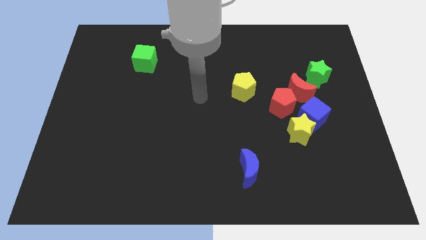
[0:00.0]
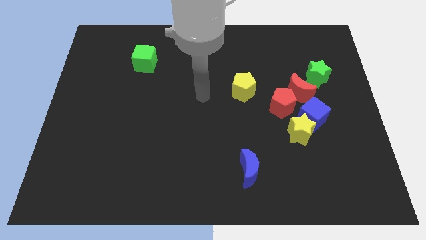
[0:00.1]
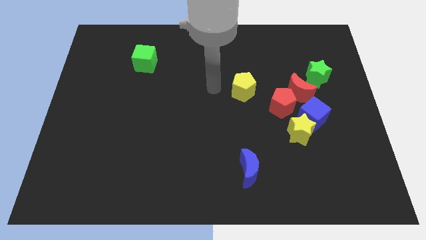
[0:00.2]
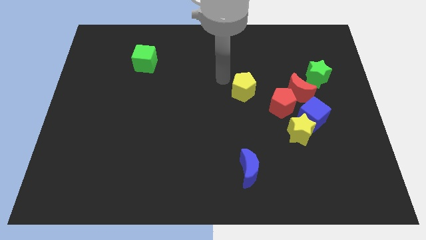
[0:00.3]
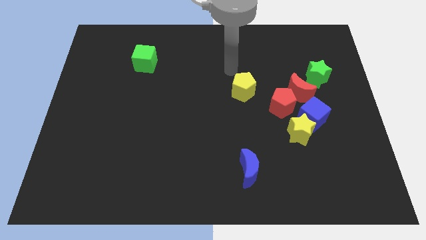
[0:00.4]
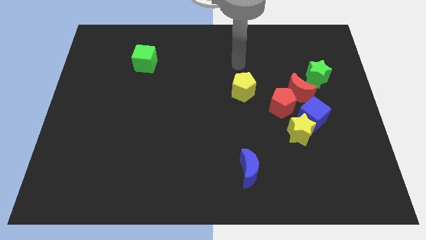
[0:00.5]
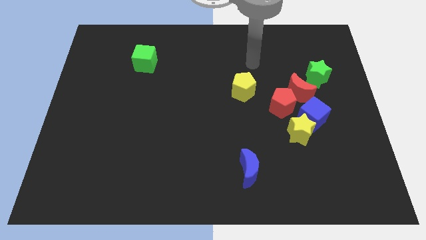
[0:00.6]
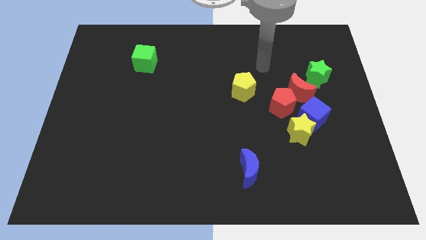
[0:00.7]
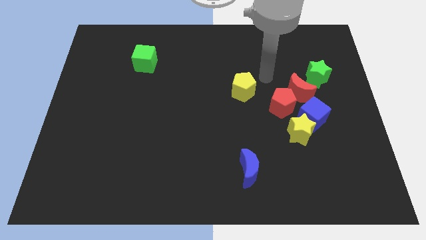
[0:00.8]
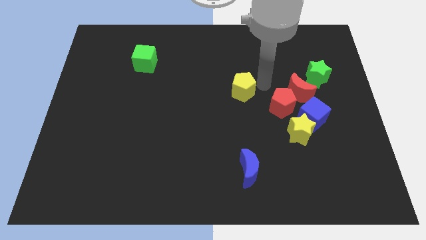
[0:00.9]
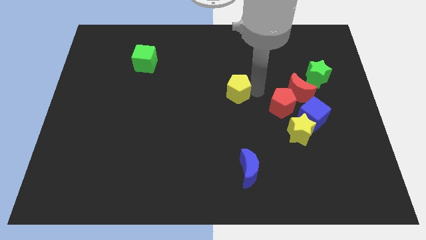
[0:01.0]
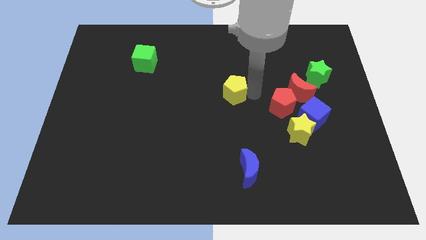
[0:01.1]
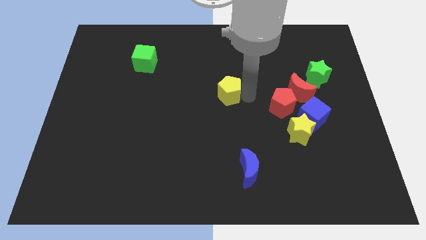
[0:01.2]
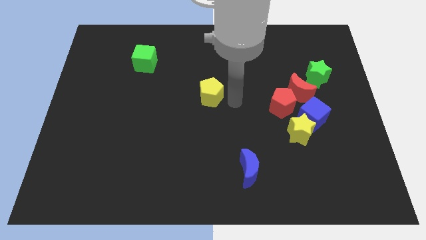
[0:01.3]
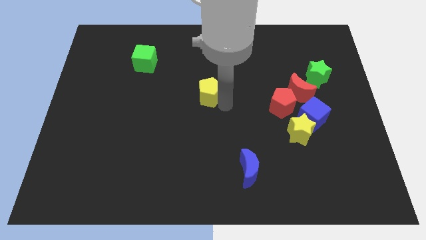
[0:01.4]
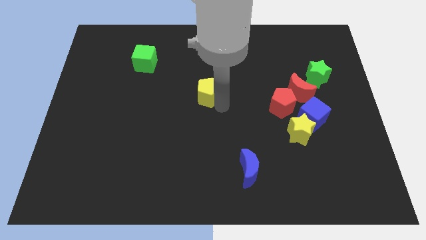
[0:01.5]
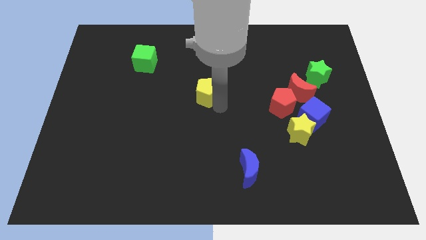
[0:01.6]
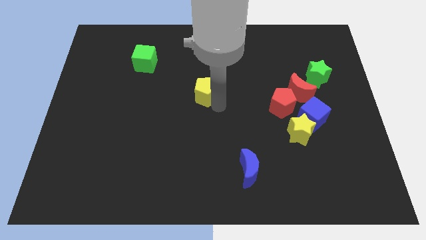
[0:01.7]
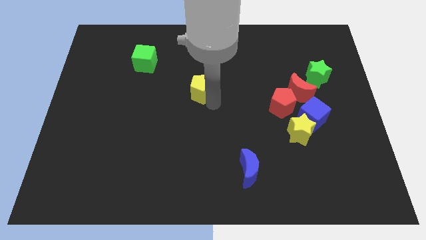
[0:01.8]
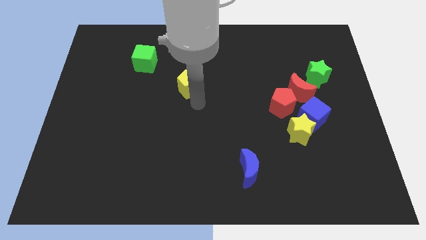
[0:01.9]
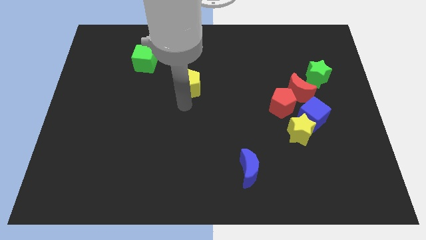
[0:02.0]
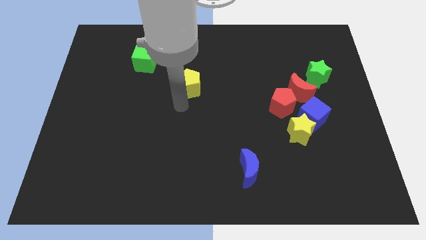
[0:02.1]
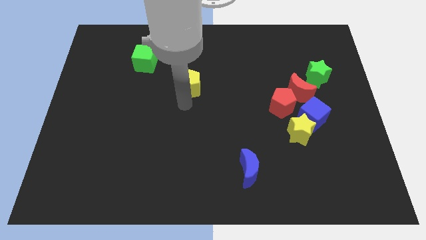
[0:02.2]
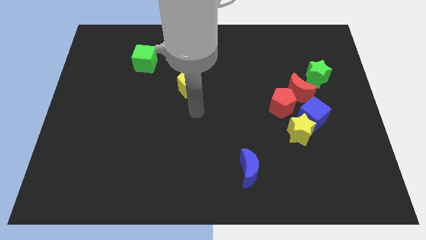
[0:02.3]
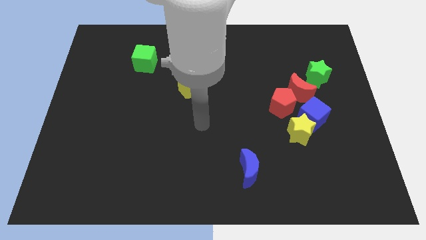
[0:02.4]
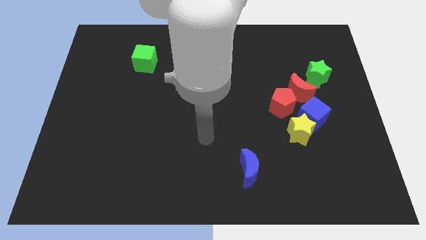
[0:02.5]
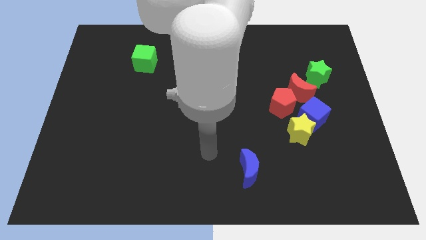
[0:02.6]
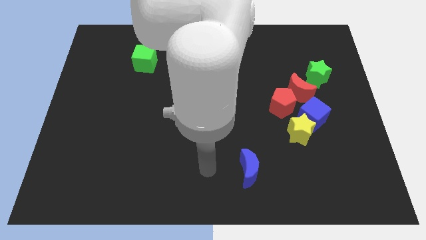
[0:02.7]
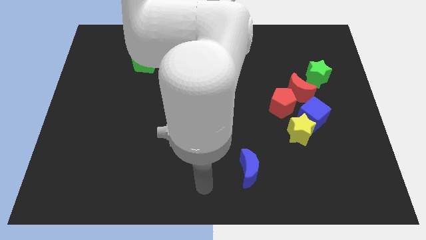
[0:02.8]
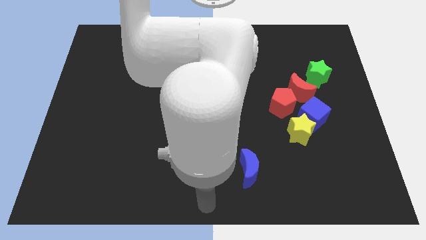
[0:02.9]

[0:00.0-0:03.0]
slightly push the yellow pentagon to the left side

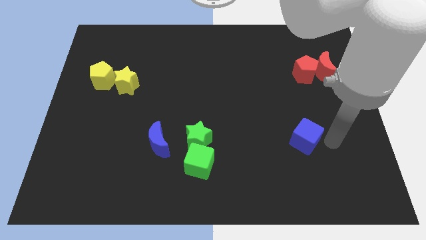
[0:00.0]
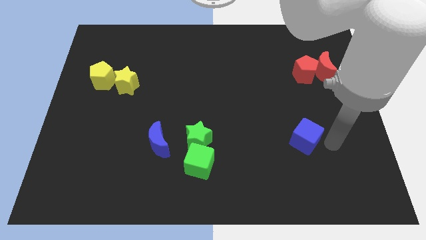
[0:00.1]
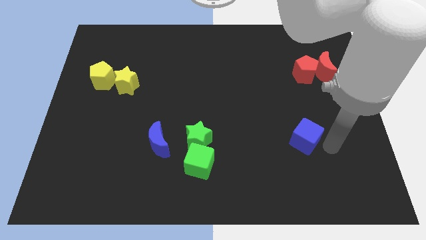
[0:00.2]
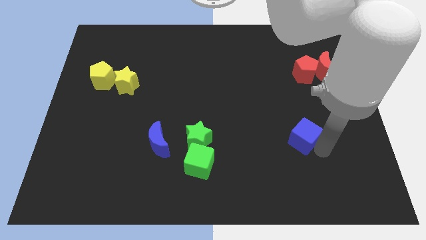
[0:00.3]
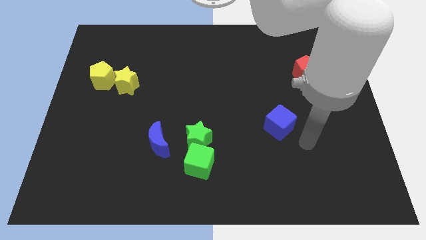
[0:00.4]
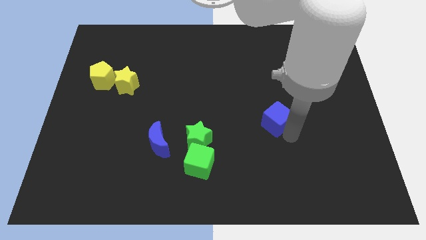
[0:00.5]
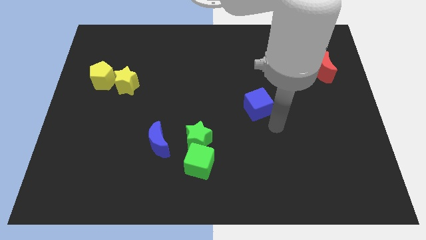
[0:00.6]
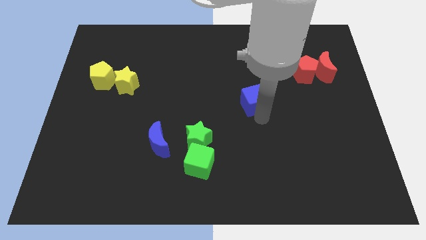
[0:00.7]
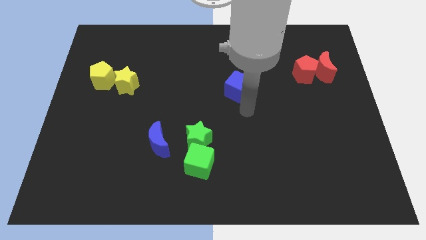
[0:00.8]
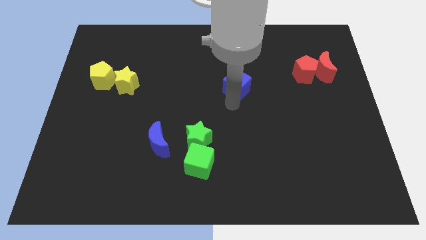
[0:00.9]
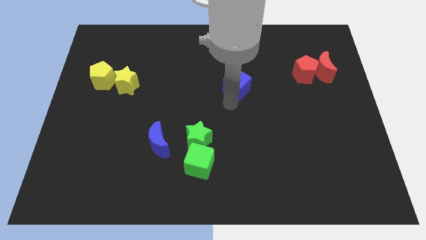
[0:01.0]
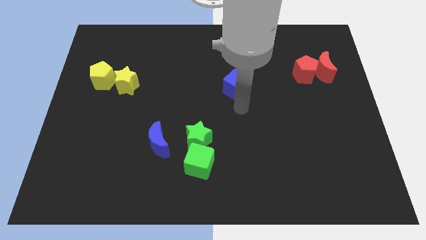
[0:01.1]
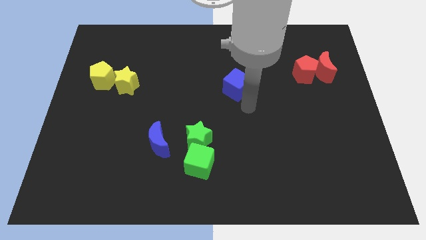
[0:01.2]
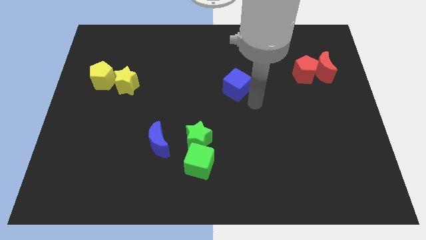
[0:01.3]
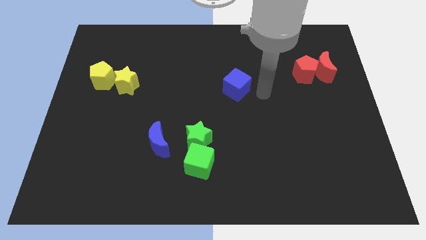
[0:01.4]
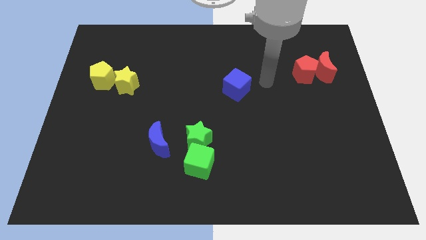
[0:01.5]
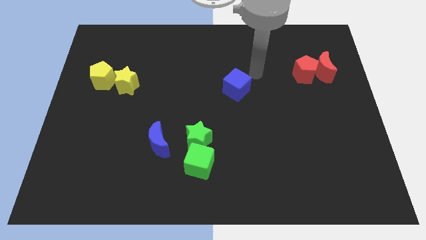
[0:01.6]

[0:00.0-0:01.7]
push the blue cube to the top right of the green star

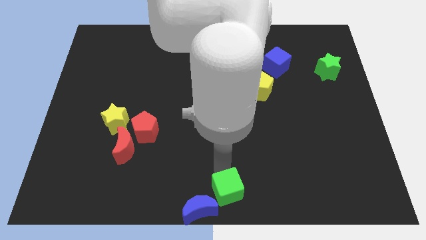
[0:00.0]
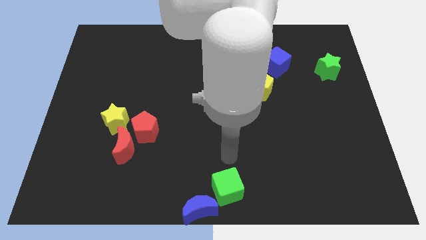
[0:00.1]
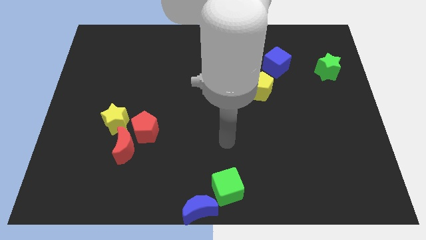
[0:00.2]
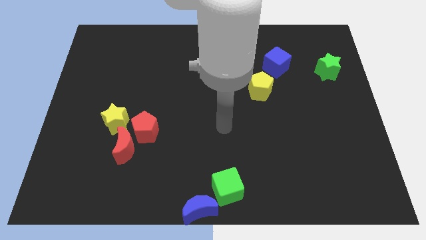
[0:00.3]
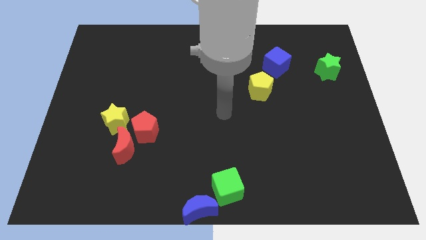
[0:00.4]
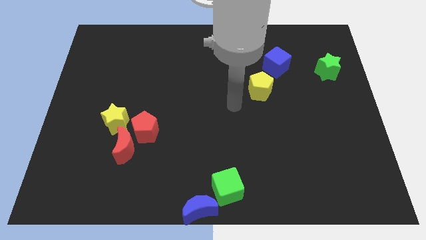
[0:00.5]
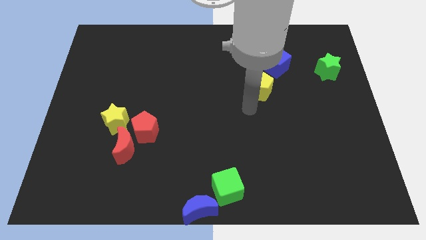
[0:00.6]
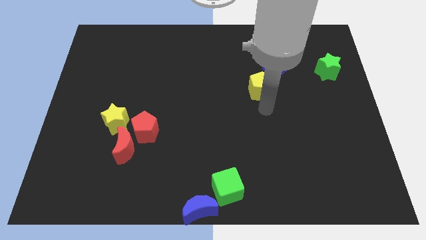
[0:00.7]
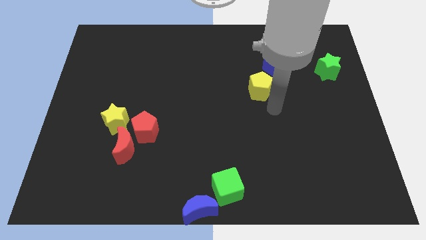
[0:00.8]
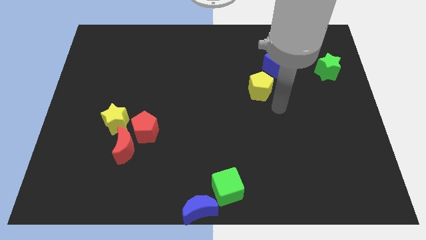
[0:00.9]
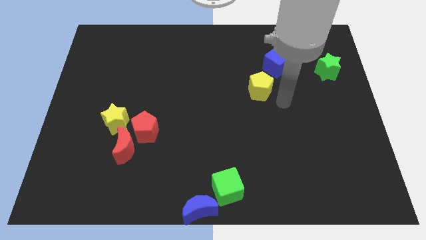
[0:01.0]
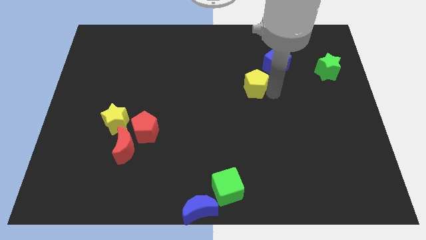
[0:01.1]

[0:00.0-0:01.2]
move away from green cube

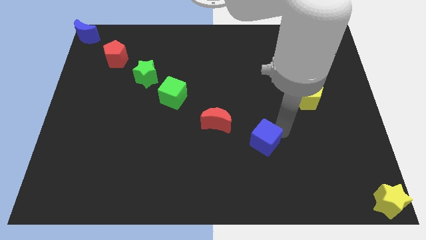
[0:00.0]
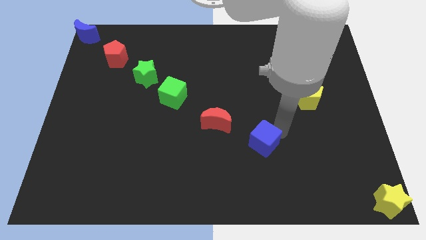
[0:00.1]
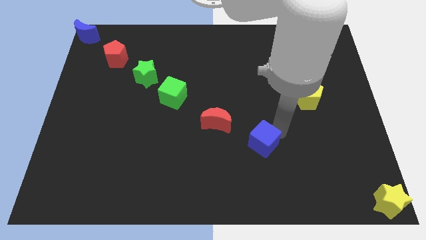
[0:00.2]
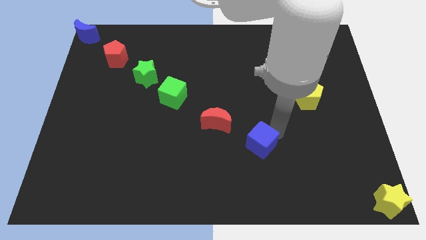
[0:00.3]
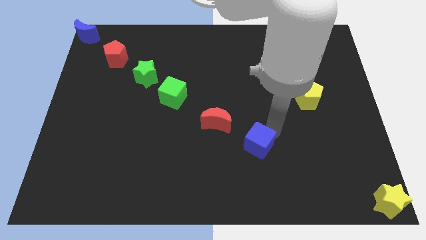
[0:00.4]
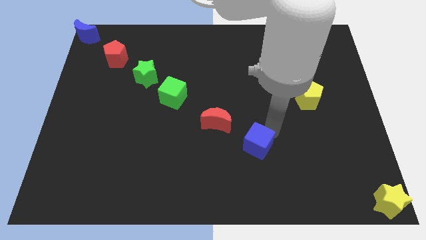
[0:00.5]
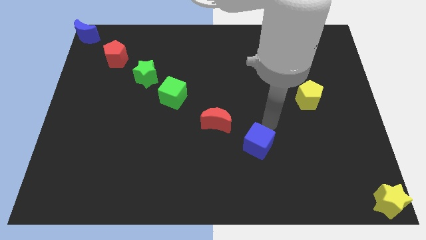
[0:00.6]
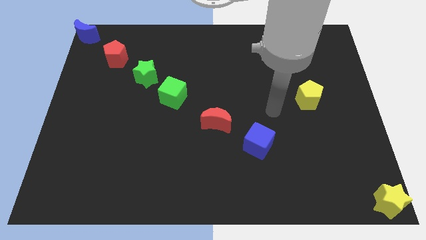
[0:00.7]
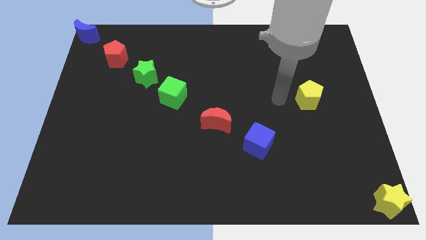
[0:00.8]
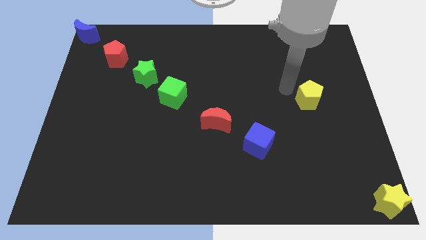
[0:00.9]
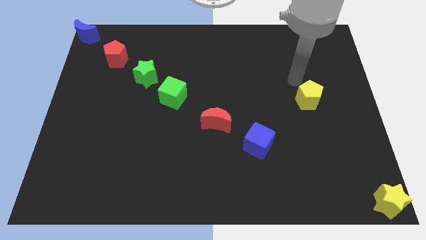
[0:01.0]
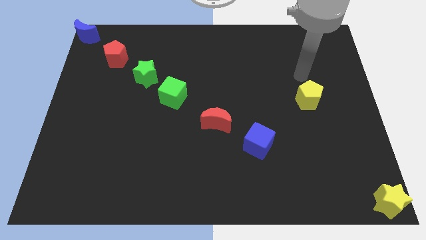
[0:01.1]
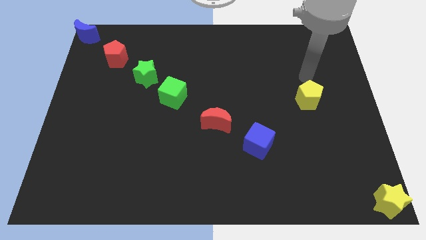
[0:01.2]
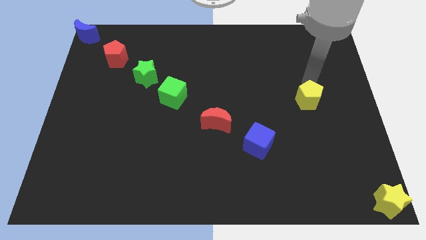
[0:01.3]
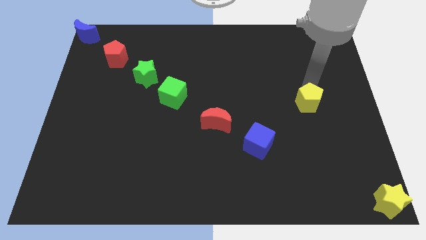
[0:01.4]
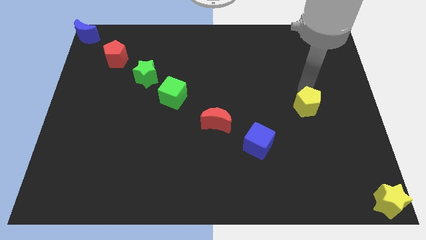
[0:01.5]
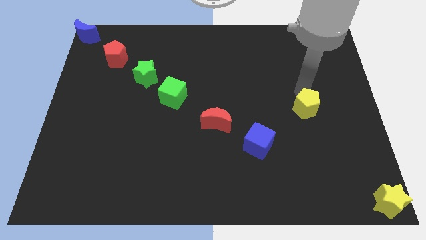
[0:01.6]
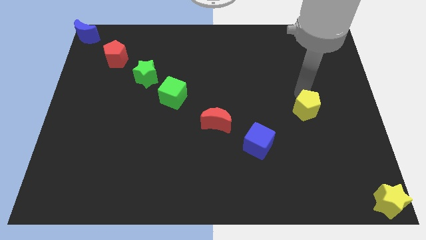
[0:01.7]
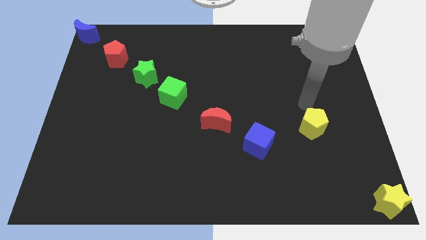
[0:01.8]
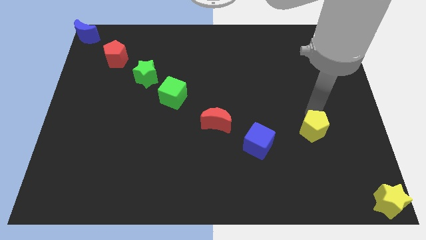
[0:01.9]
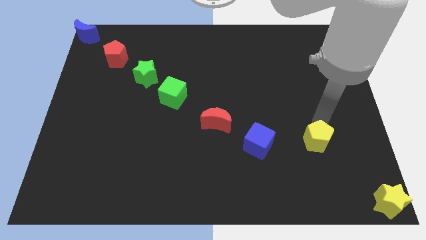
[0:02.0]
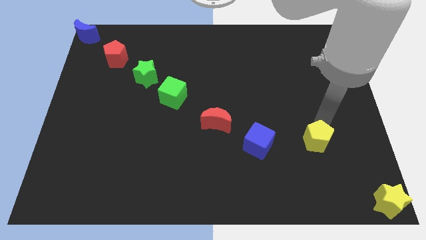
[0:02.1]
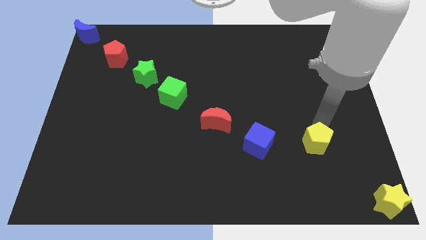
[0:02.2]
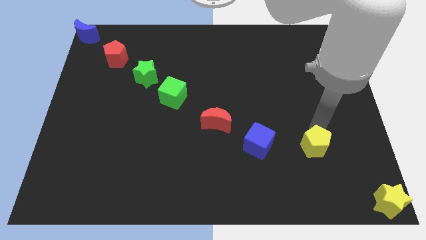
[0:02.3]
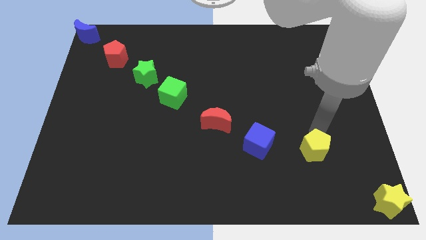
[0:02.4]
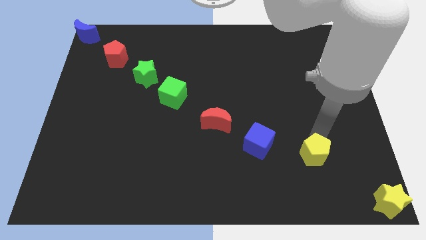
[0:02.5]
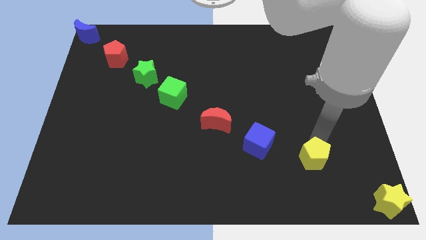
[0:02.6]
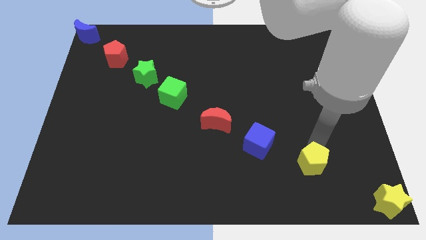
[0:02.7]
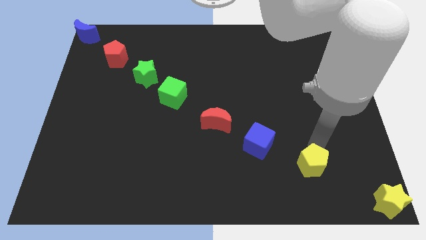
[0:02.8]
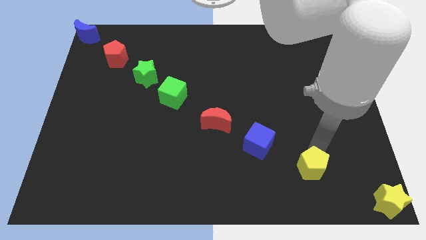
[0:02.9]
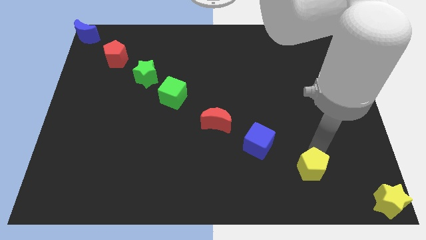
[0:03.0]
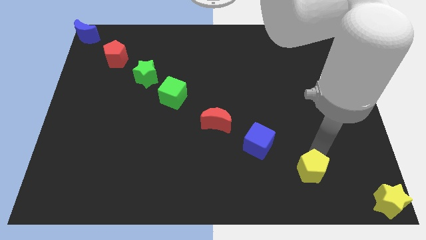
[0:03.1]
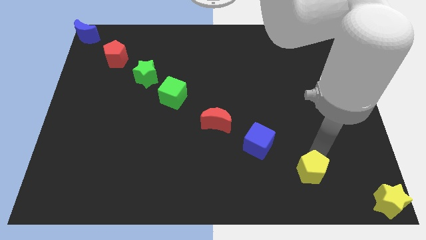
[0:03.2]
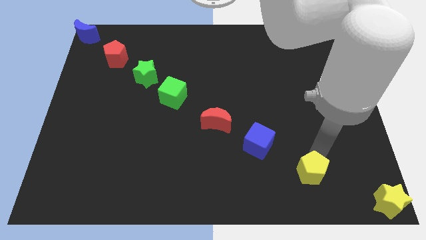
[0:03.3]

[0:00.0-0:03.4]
place the yellow pentagon beside the blue cube
